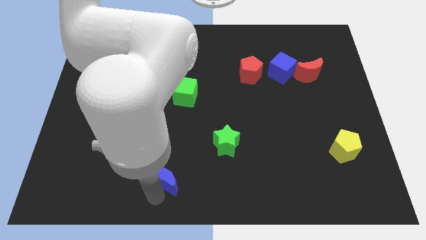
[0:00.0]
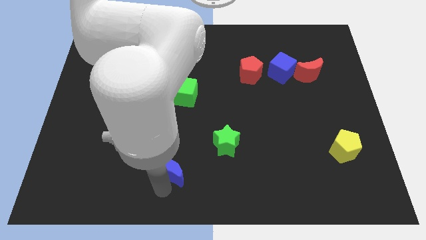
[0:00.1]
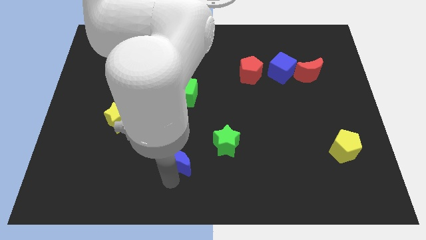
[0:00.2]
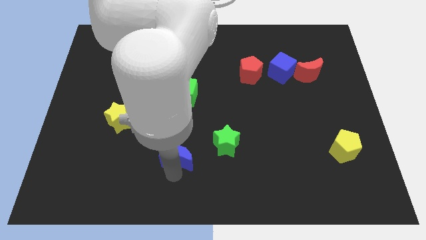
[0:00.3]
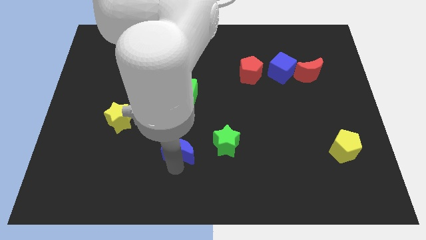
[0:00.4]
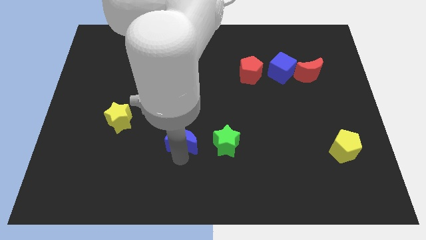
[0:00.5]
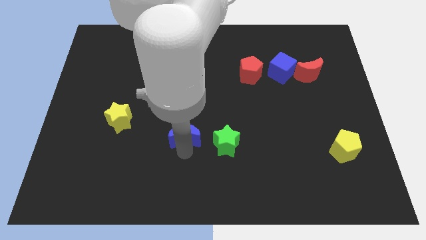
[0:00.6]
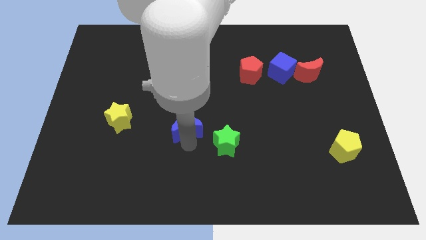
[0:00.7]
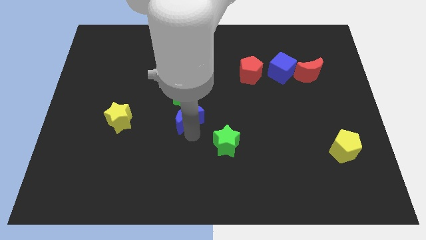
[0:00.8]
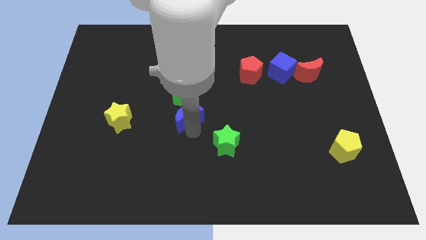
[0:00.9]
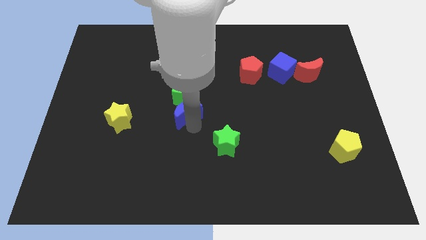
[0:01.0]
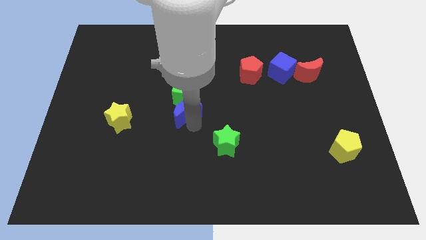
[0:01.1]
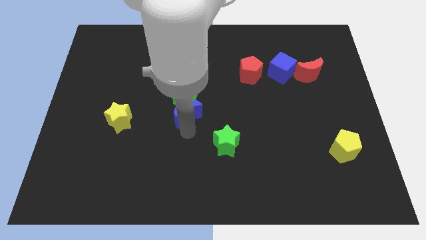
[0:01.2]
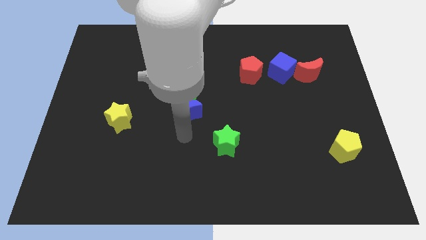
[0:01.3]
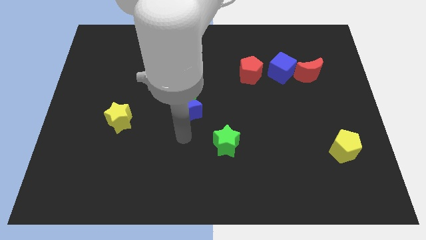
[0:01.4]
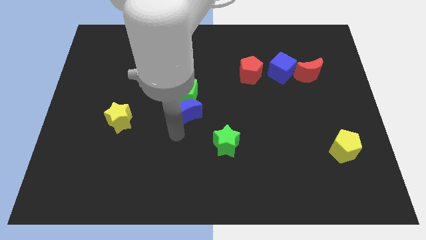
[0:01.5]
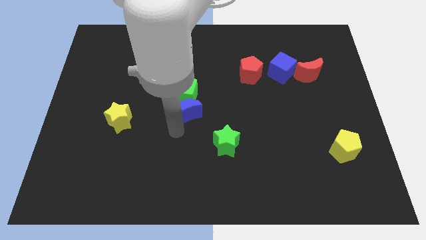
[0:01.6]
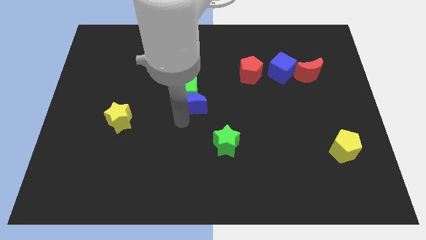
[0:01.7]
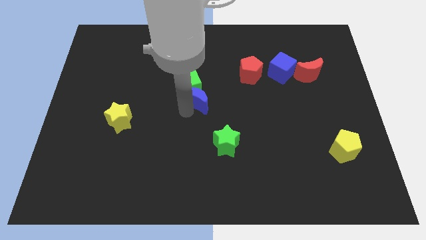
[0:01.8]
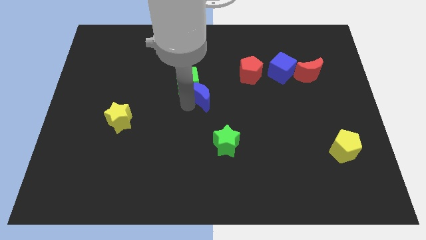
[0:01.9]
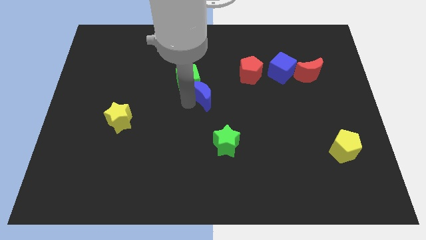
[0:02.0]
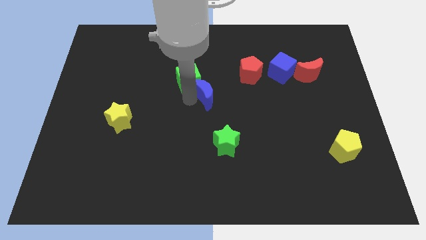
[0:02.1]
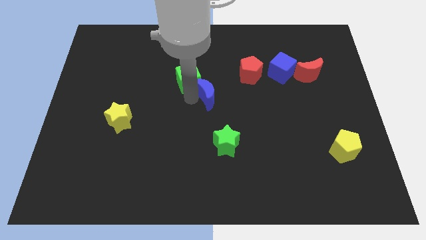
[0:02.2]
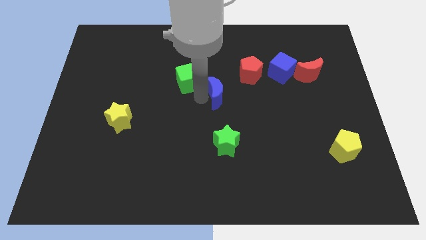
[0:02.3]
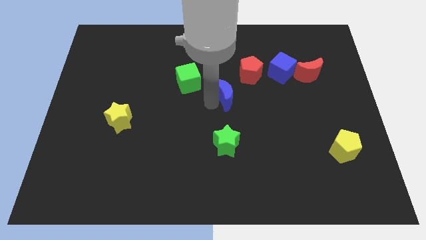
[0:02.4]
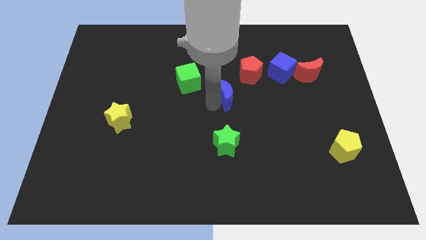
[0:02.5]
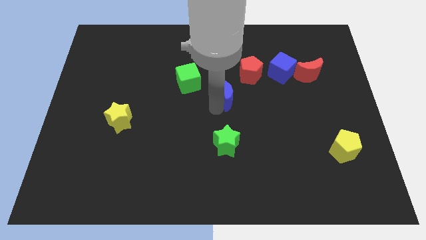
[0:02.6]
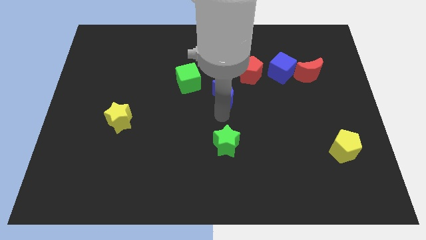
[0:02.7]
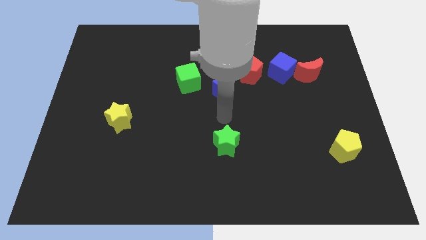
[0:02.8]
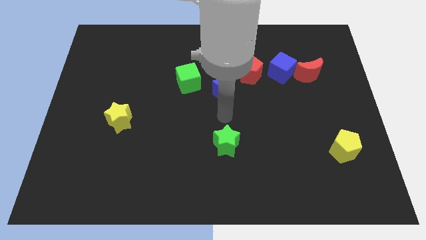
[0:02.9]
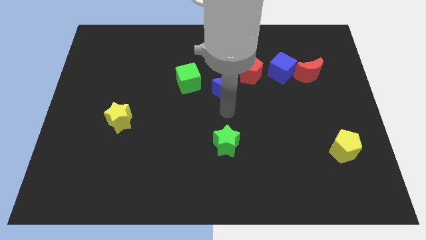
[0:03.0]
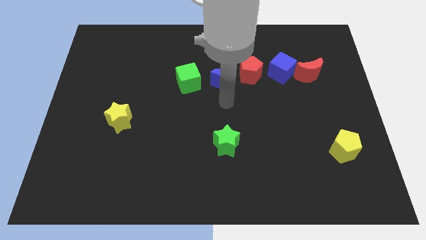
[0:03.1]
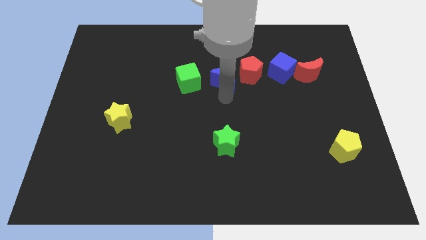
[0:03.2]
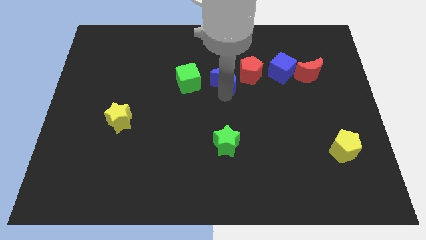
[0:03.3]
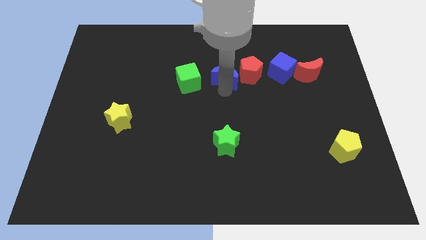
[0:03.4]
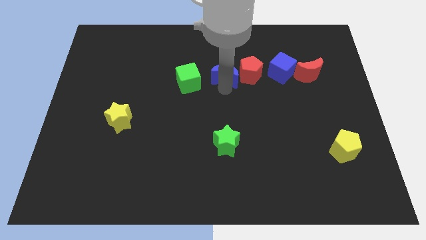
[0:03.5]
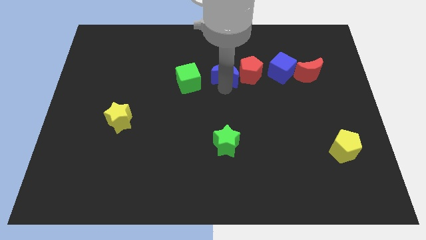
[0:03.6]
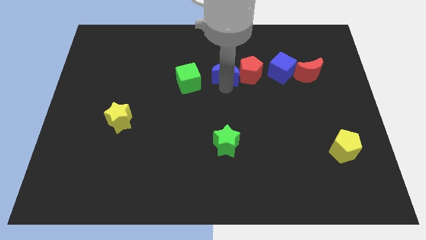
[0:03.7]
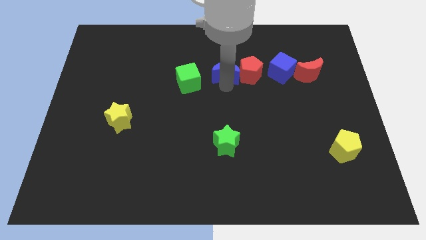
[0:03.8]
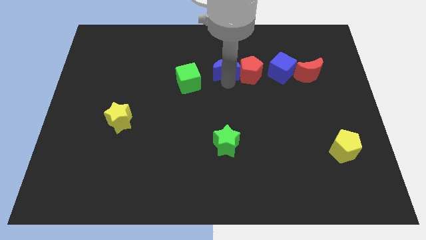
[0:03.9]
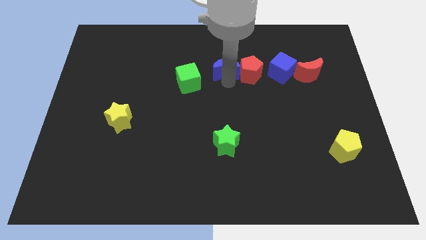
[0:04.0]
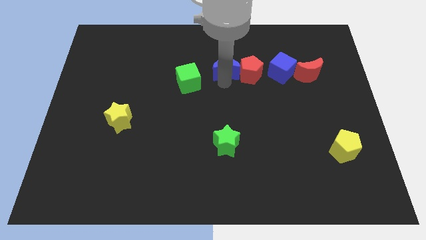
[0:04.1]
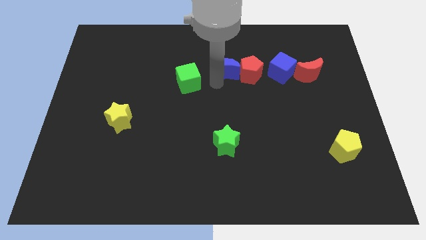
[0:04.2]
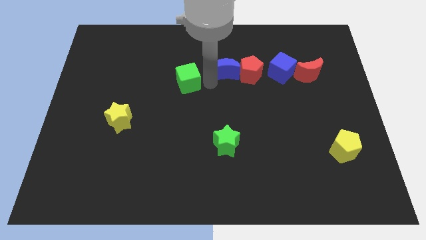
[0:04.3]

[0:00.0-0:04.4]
drag the blue moon between the red pentagon and green cube

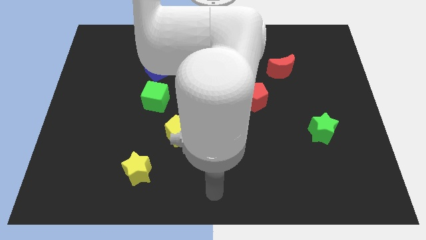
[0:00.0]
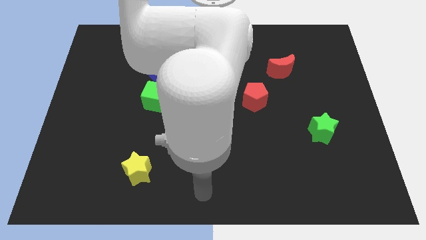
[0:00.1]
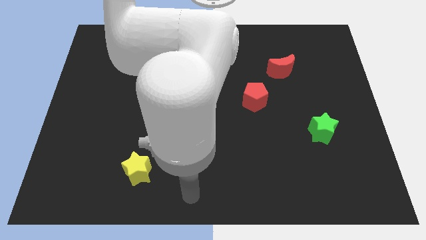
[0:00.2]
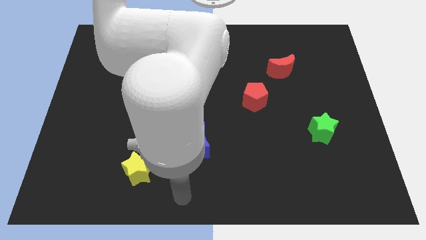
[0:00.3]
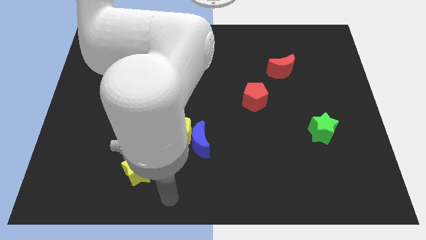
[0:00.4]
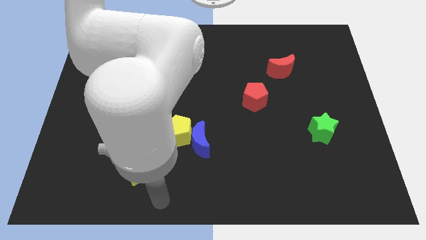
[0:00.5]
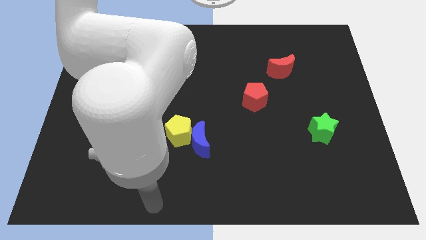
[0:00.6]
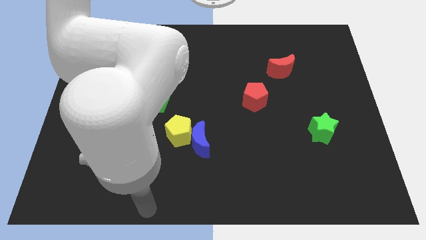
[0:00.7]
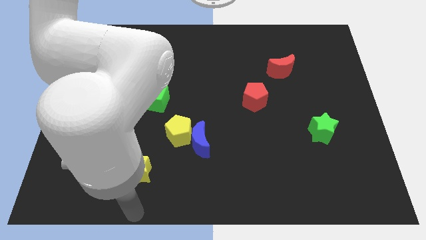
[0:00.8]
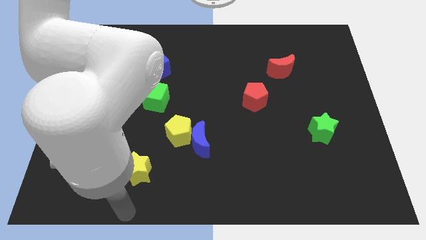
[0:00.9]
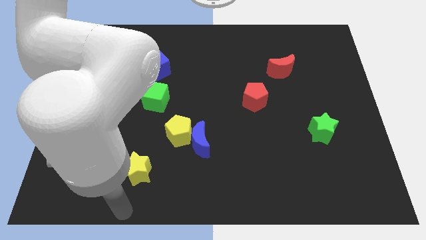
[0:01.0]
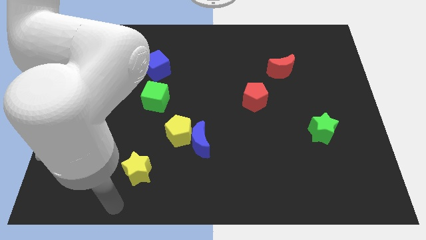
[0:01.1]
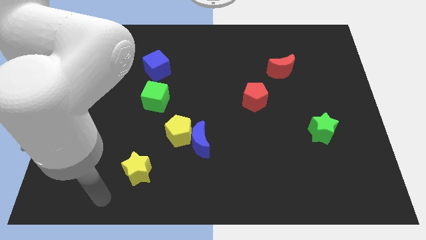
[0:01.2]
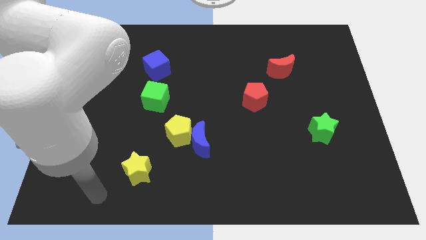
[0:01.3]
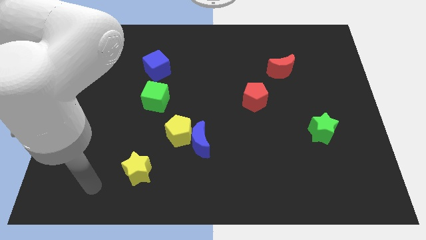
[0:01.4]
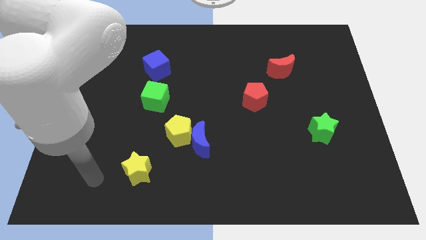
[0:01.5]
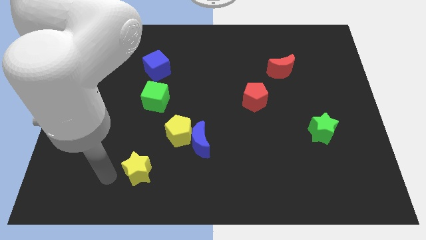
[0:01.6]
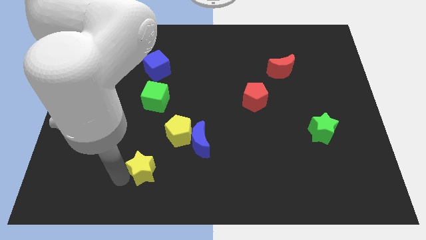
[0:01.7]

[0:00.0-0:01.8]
put your hand at the left side of the yellow star

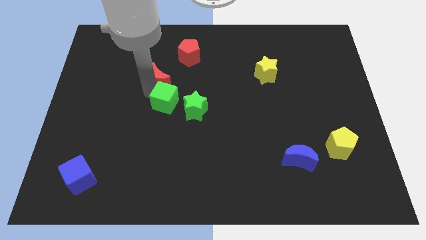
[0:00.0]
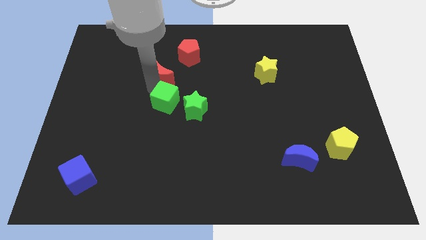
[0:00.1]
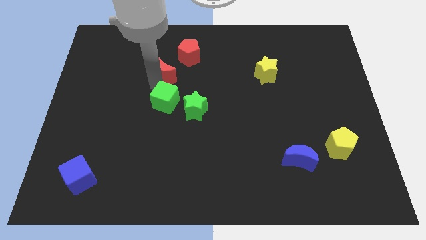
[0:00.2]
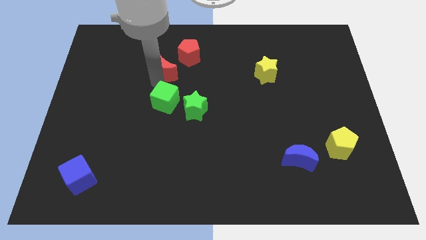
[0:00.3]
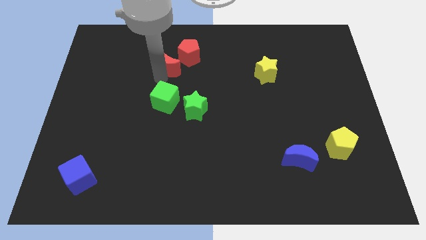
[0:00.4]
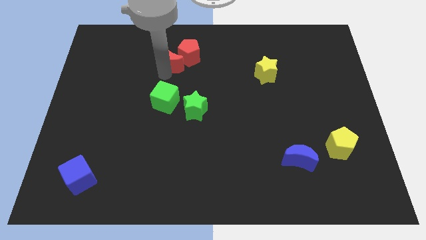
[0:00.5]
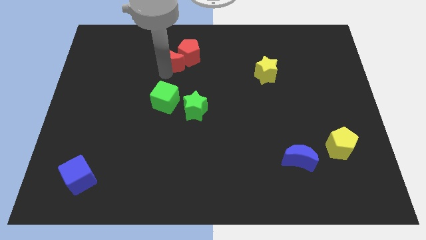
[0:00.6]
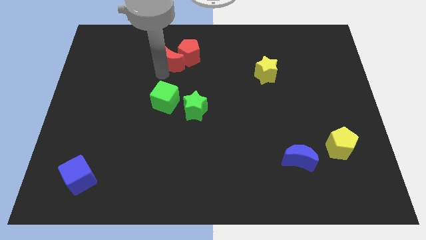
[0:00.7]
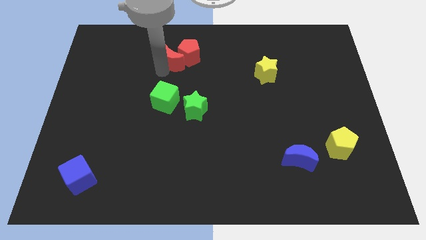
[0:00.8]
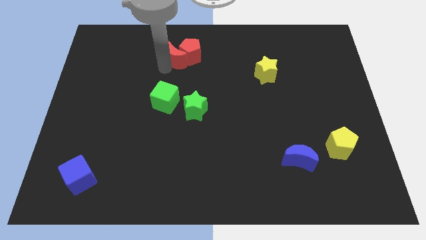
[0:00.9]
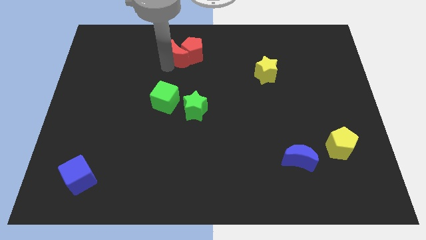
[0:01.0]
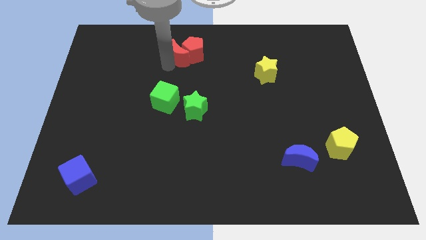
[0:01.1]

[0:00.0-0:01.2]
move red crescent into red pentagon

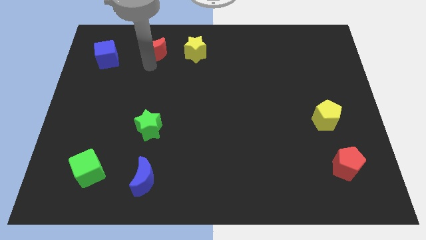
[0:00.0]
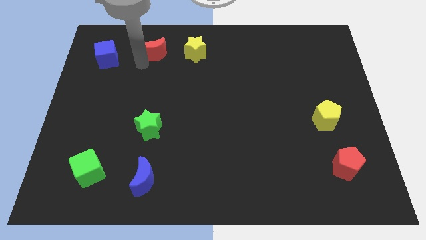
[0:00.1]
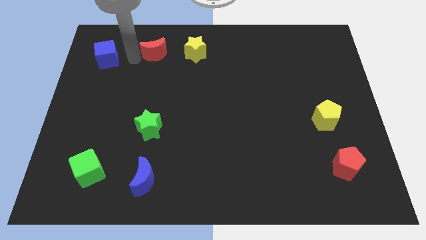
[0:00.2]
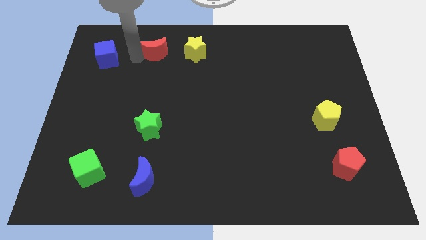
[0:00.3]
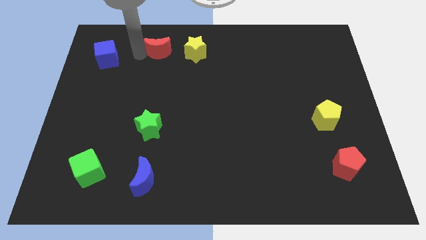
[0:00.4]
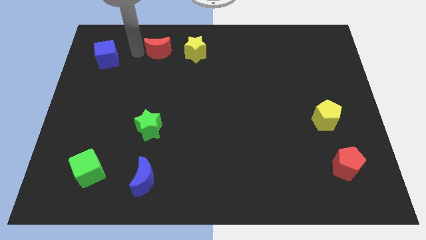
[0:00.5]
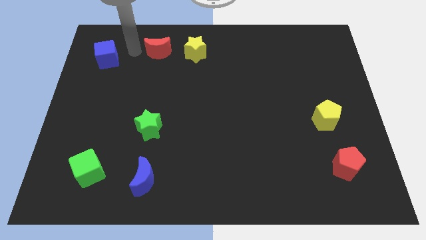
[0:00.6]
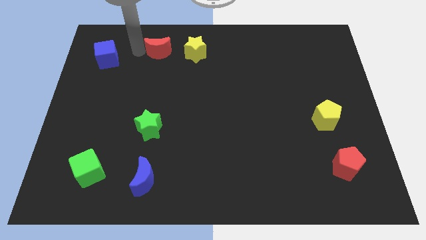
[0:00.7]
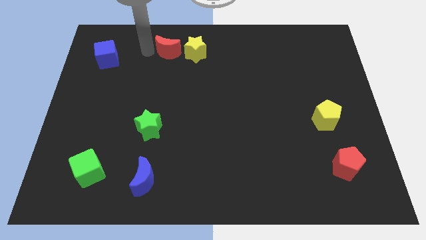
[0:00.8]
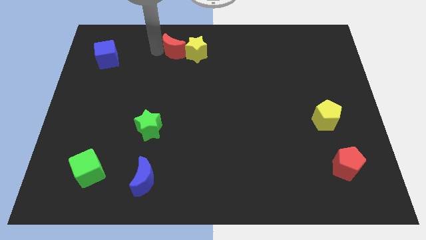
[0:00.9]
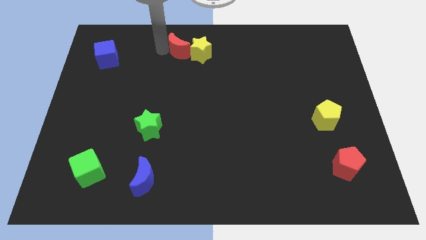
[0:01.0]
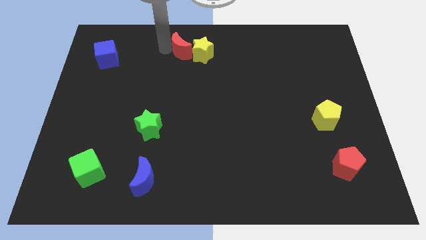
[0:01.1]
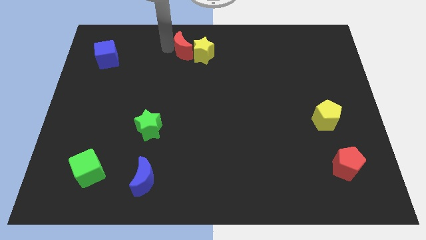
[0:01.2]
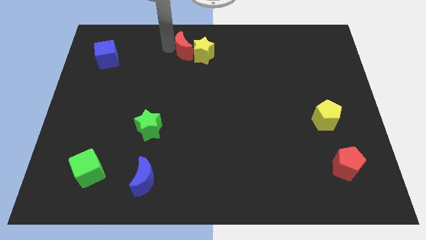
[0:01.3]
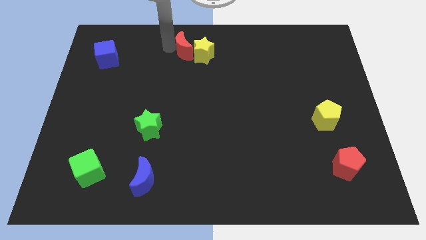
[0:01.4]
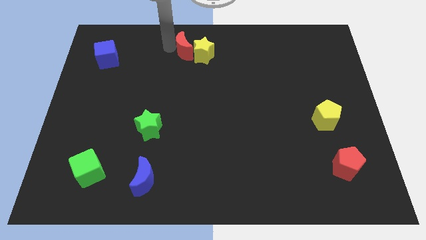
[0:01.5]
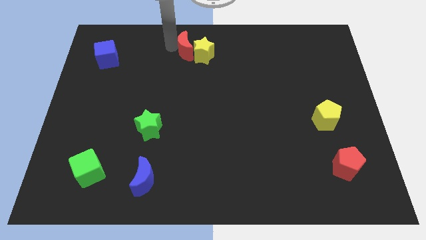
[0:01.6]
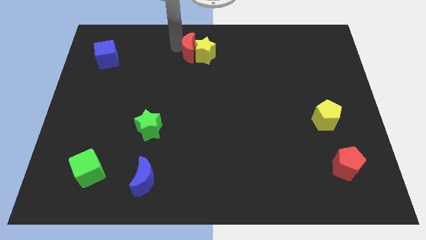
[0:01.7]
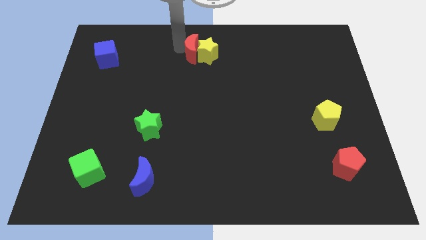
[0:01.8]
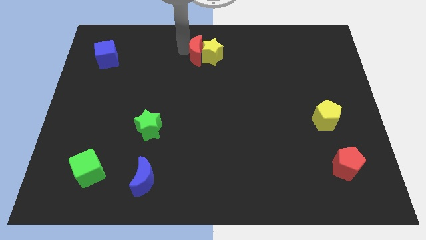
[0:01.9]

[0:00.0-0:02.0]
push the red moon into the yellow star
